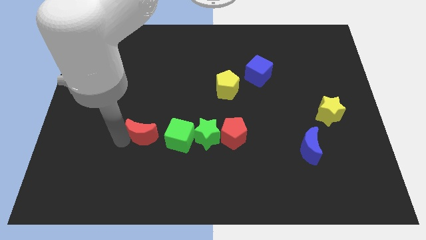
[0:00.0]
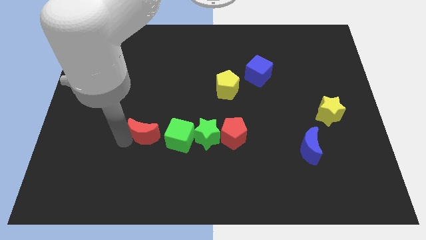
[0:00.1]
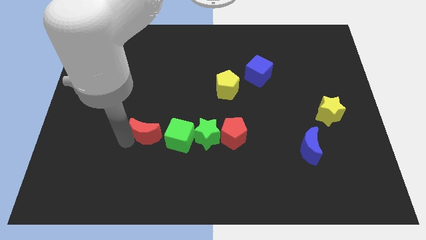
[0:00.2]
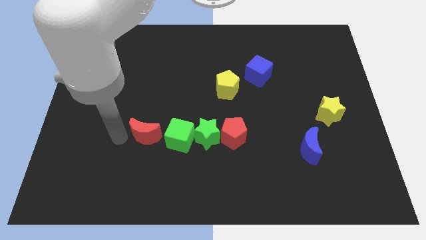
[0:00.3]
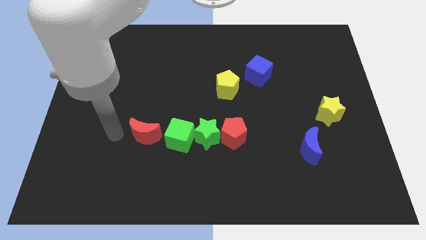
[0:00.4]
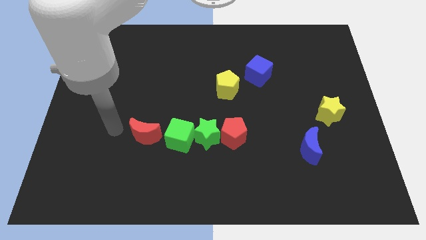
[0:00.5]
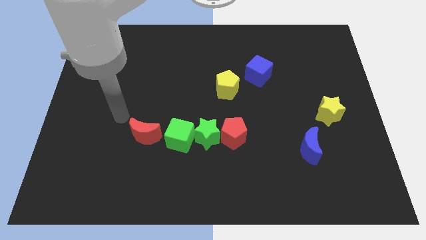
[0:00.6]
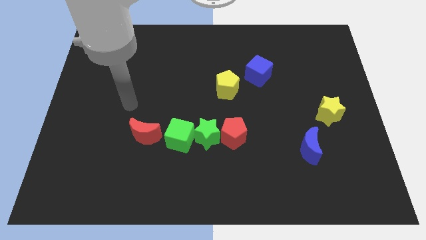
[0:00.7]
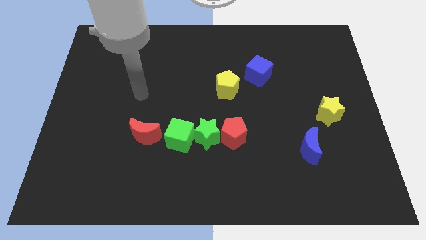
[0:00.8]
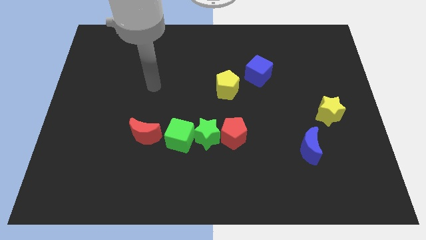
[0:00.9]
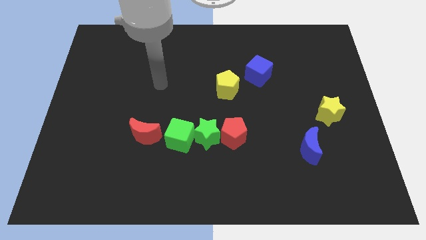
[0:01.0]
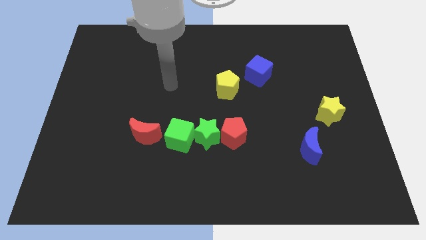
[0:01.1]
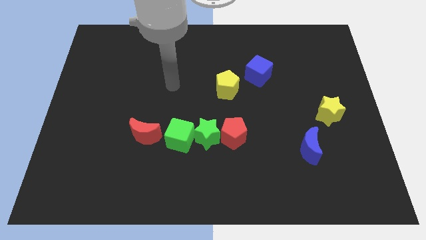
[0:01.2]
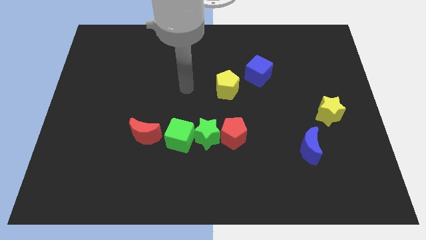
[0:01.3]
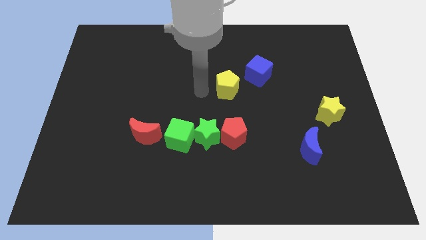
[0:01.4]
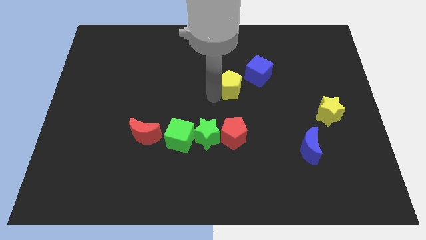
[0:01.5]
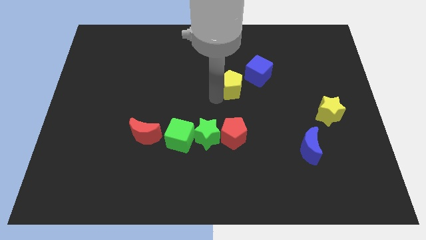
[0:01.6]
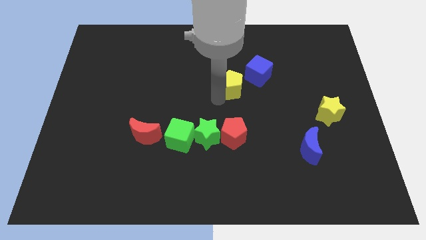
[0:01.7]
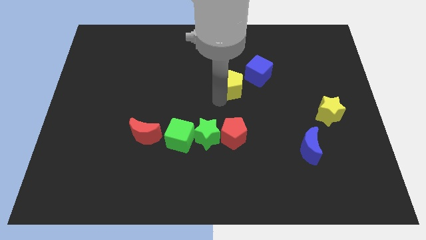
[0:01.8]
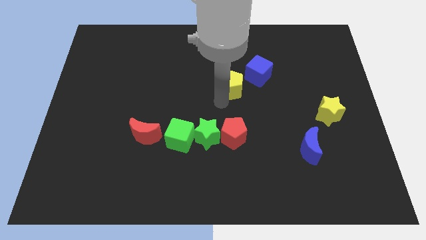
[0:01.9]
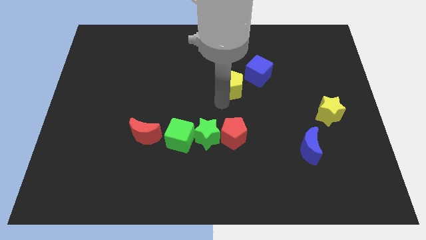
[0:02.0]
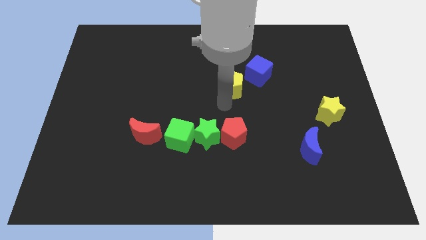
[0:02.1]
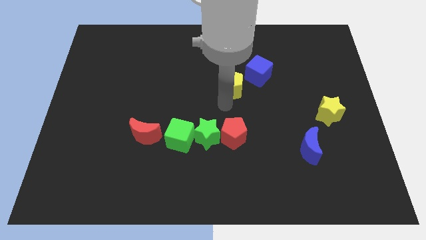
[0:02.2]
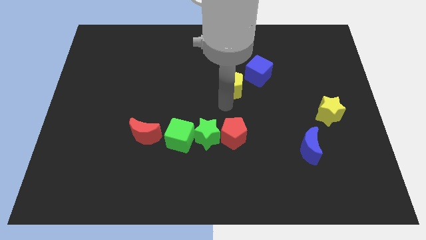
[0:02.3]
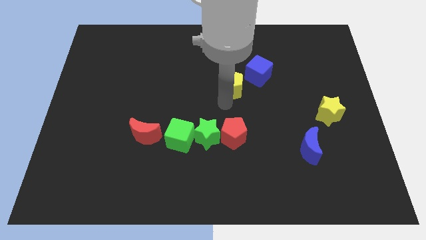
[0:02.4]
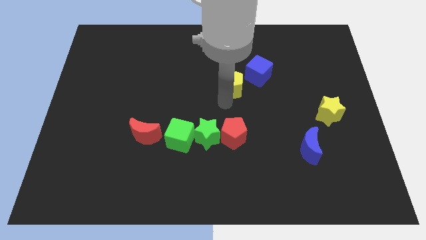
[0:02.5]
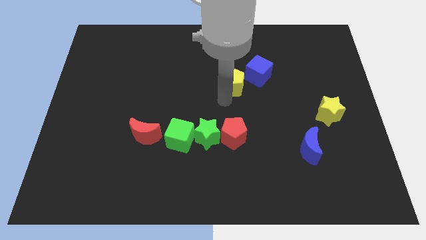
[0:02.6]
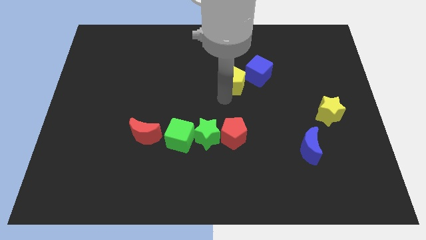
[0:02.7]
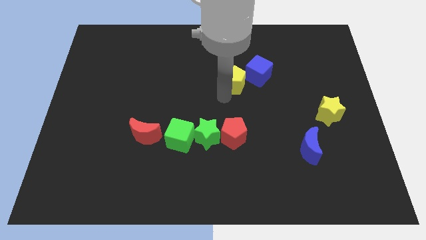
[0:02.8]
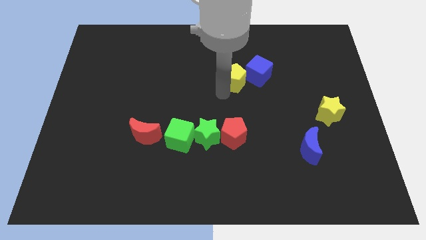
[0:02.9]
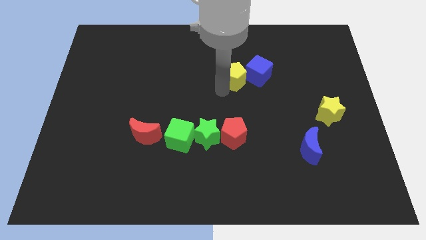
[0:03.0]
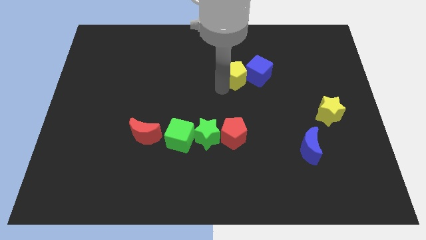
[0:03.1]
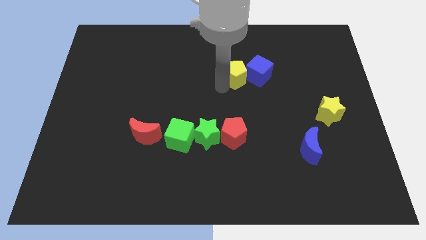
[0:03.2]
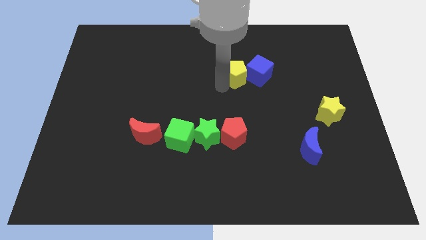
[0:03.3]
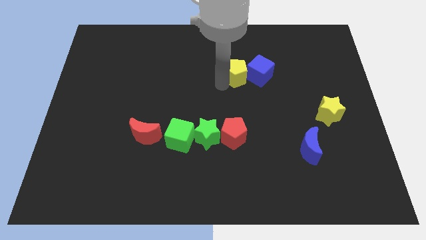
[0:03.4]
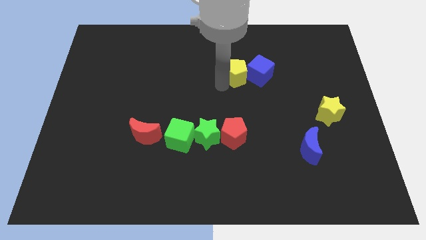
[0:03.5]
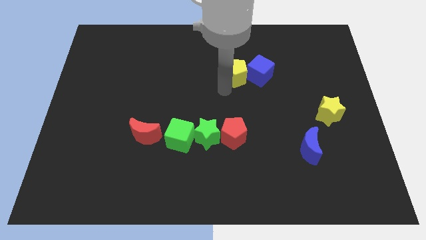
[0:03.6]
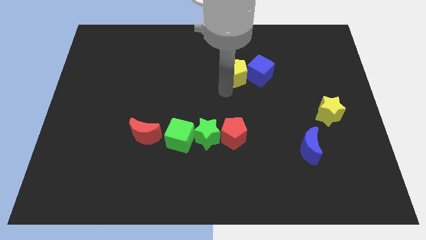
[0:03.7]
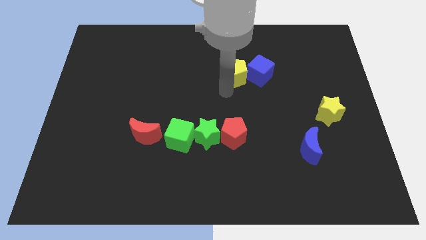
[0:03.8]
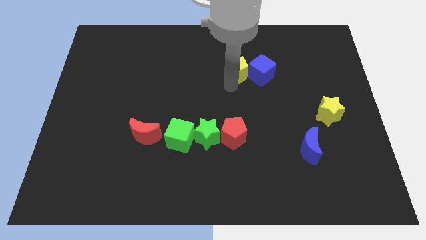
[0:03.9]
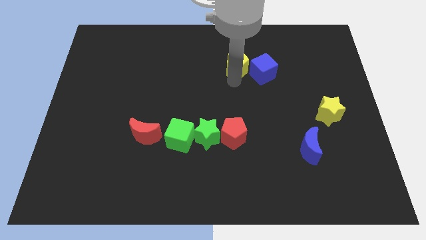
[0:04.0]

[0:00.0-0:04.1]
push the yellow pentagon into the blue cube

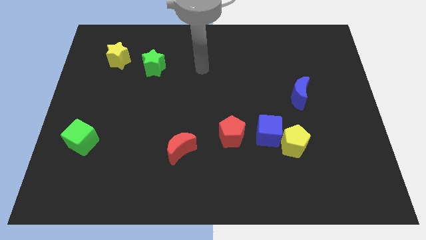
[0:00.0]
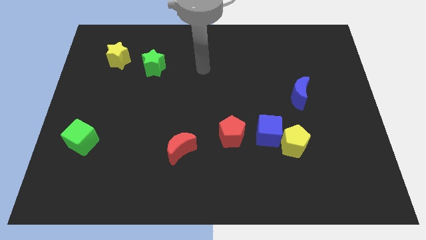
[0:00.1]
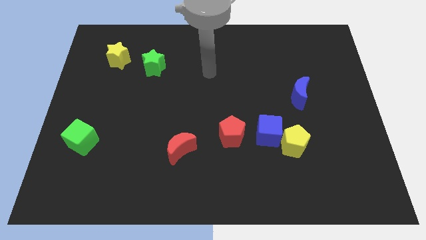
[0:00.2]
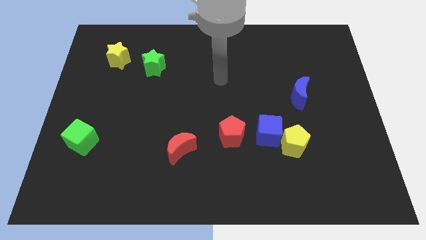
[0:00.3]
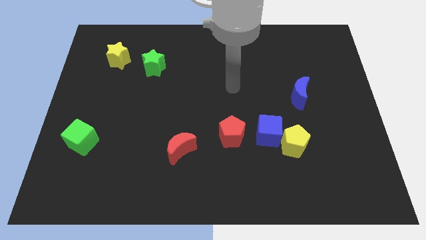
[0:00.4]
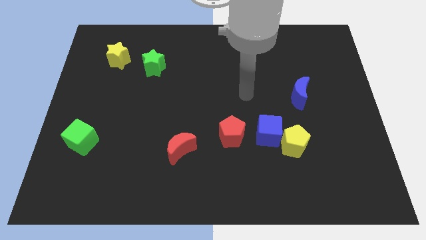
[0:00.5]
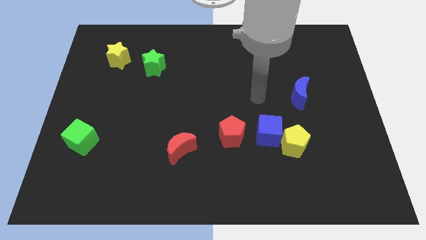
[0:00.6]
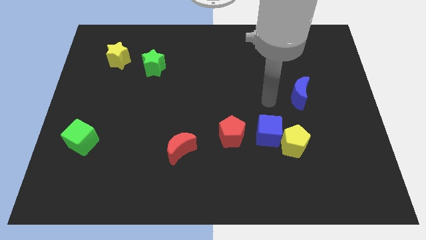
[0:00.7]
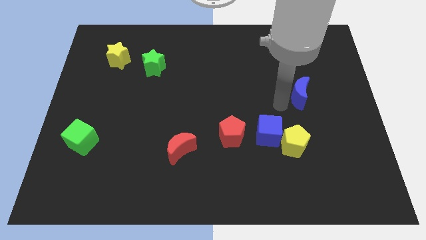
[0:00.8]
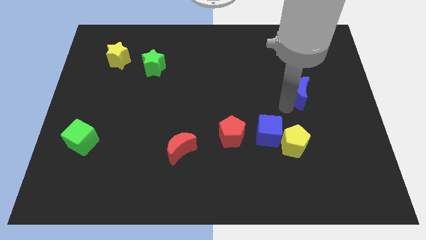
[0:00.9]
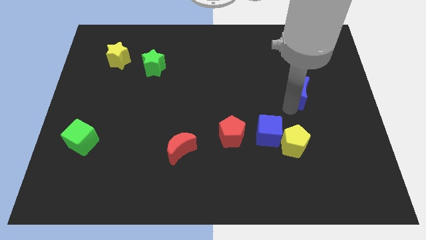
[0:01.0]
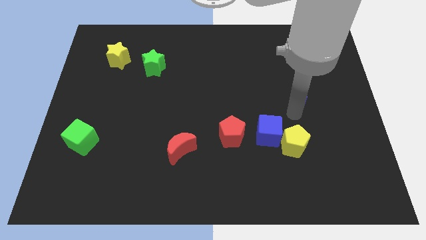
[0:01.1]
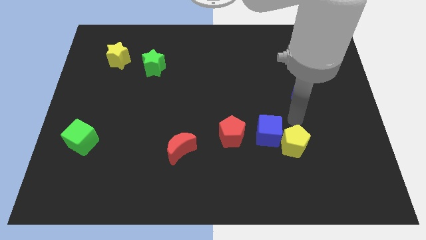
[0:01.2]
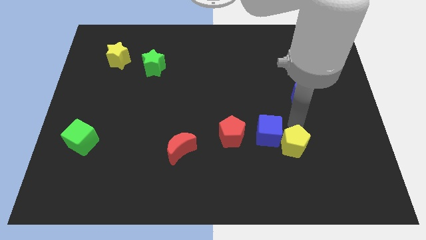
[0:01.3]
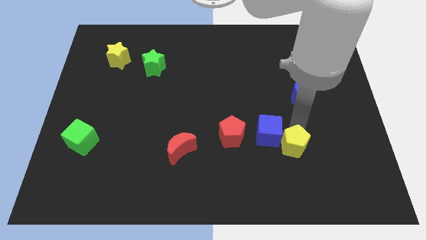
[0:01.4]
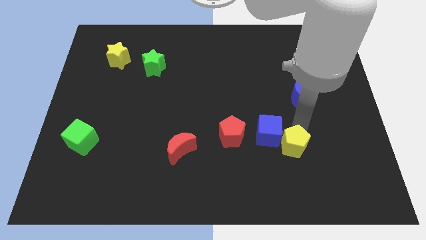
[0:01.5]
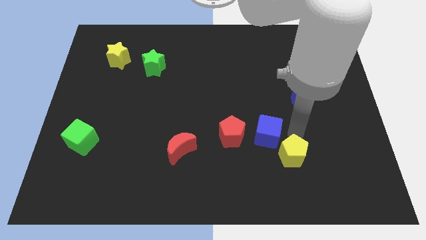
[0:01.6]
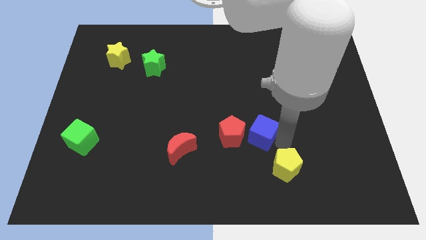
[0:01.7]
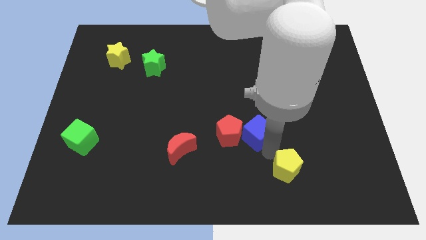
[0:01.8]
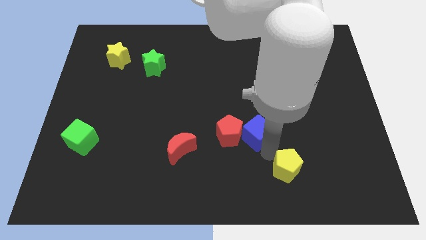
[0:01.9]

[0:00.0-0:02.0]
separate the yellow pentagon and the blue cube

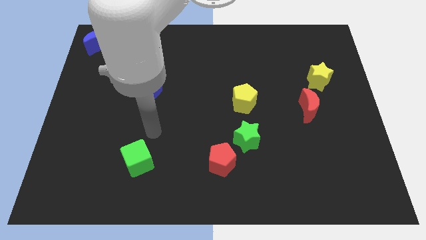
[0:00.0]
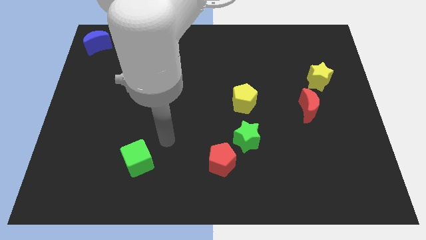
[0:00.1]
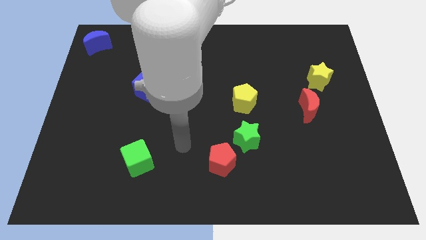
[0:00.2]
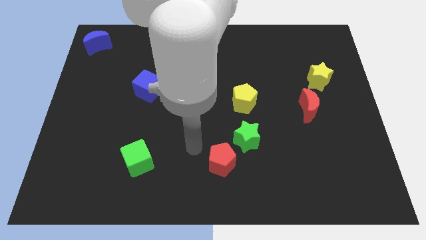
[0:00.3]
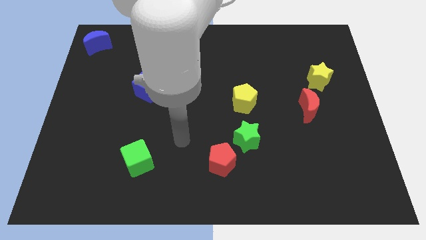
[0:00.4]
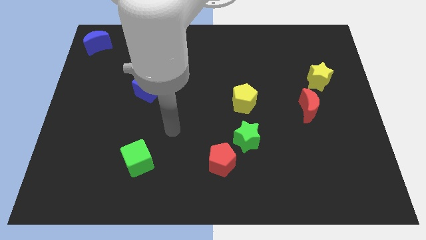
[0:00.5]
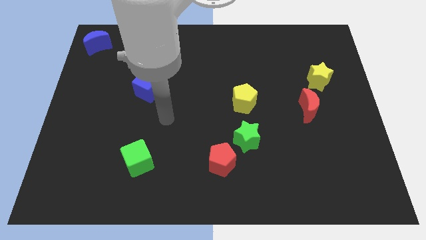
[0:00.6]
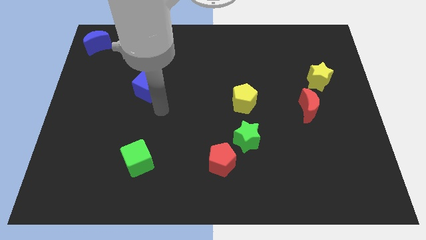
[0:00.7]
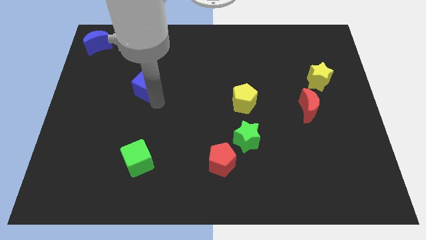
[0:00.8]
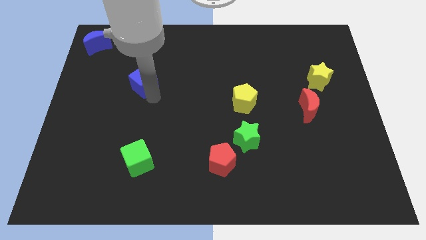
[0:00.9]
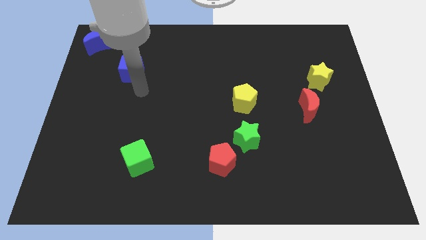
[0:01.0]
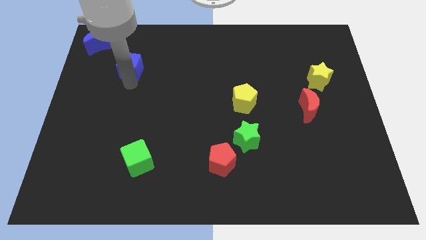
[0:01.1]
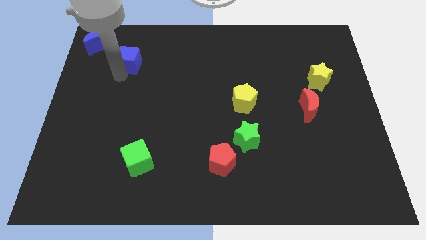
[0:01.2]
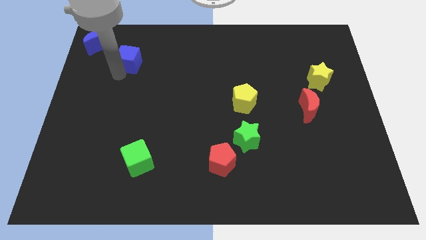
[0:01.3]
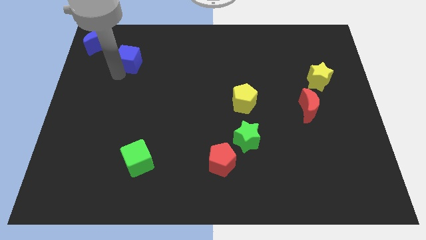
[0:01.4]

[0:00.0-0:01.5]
push the blue cube to the bottom right of the blue crescent

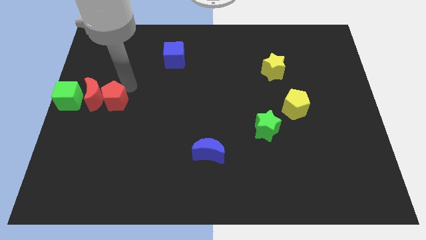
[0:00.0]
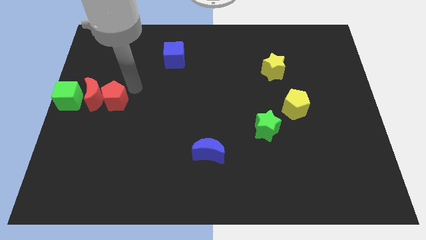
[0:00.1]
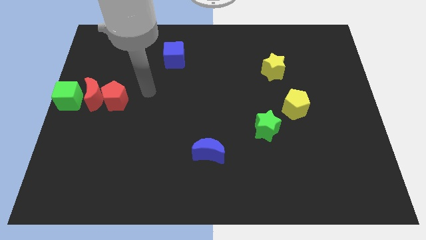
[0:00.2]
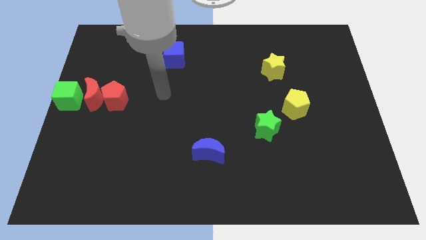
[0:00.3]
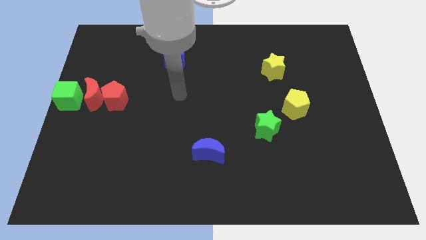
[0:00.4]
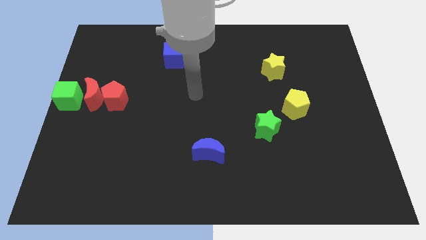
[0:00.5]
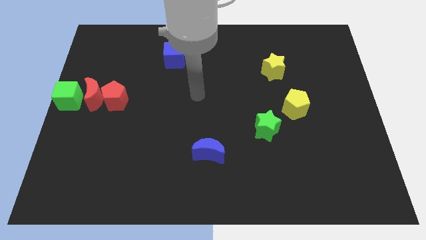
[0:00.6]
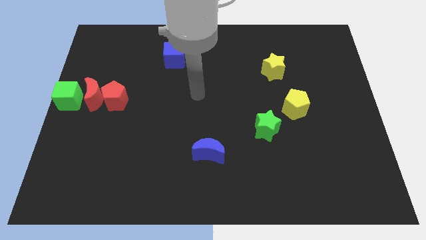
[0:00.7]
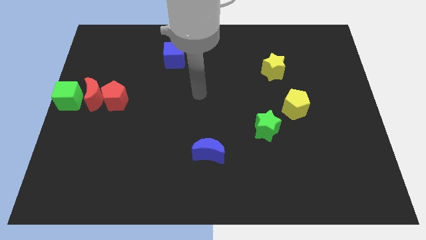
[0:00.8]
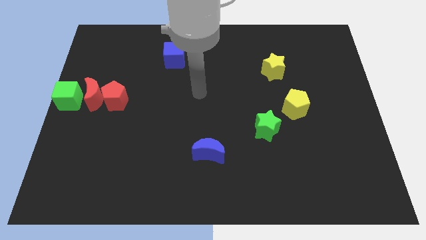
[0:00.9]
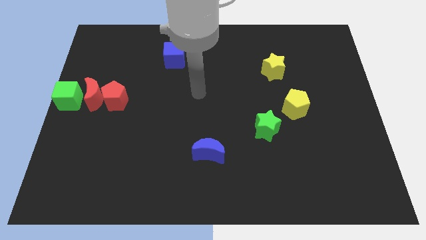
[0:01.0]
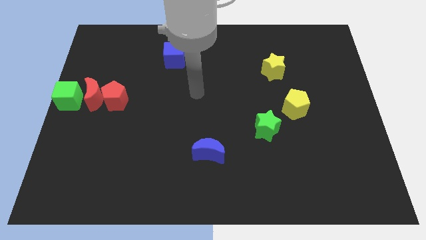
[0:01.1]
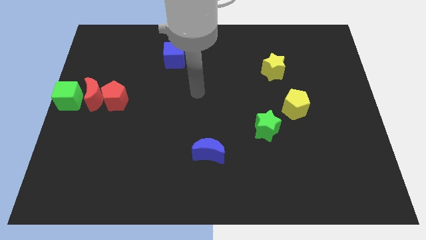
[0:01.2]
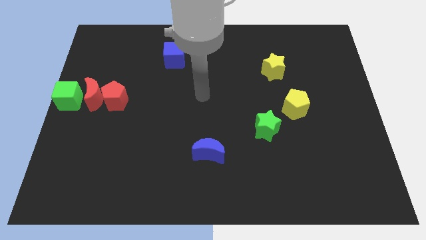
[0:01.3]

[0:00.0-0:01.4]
point your arm at the center of the board
